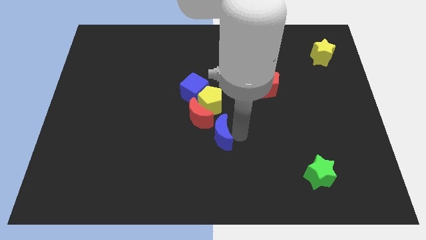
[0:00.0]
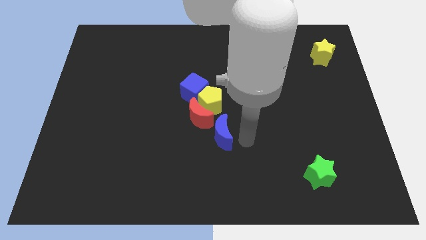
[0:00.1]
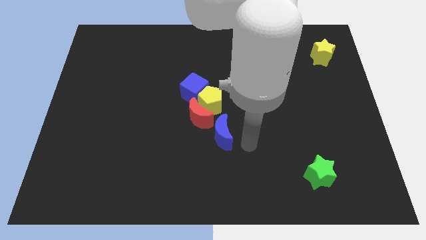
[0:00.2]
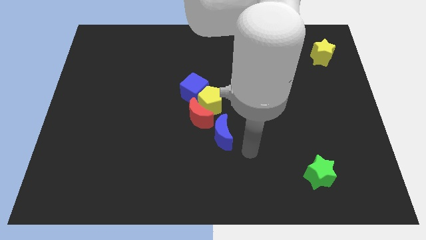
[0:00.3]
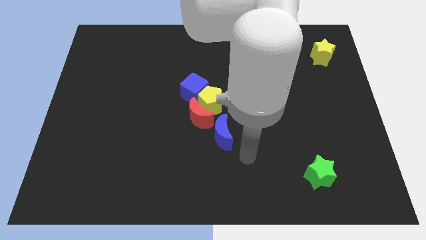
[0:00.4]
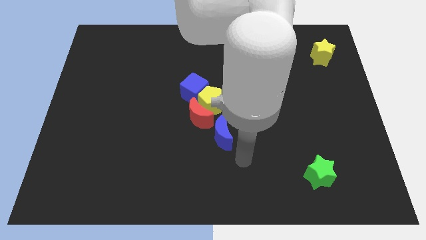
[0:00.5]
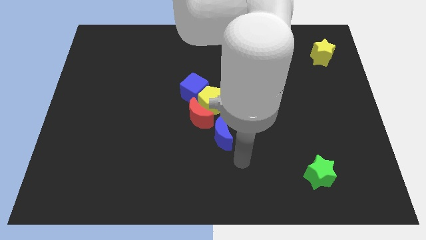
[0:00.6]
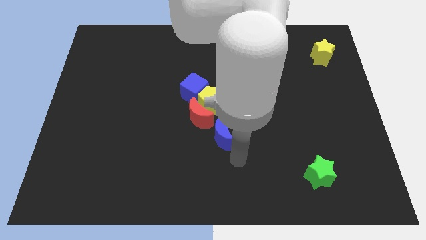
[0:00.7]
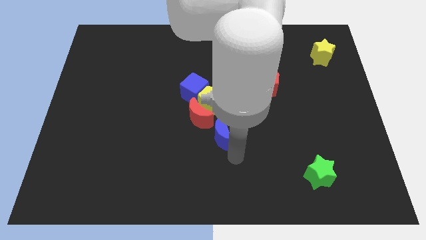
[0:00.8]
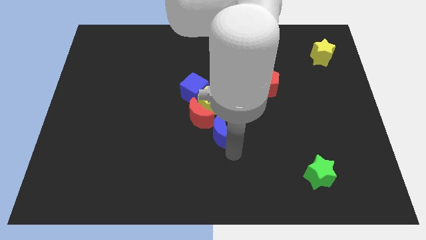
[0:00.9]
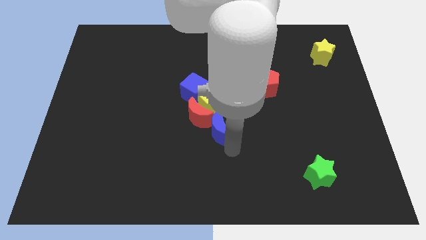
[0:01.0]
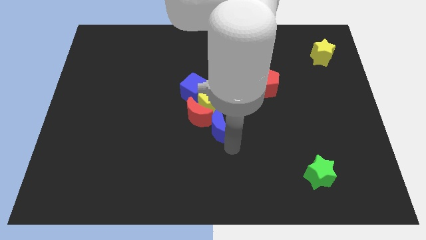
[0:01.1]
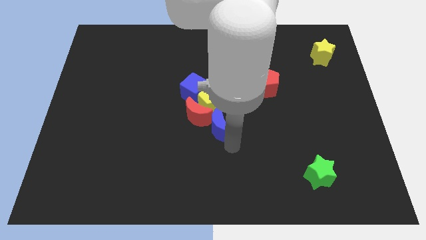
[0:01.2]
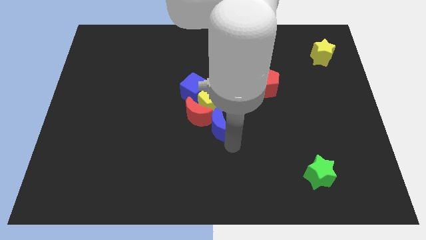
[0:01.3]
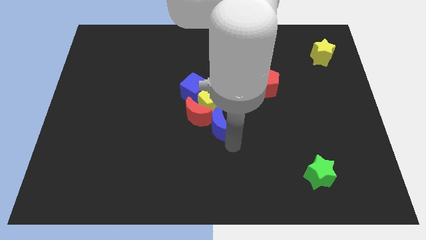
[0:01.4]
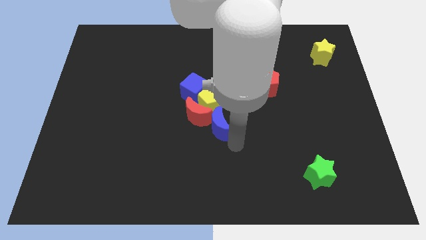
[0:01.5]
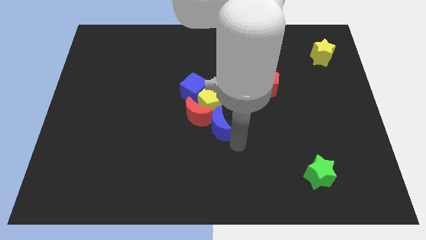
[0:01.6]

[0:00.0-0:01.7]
push the blue crescent into the red crescent

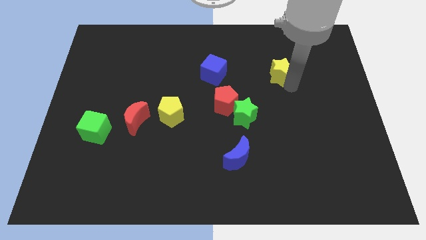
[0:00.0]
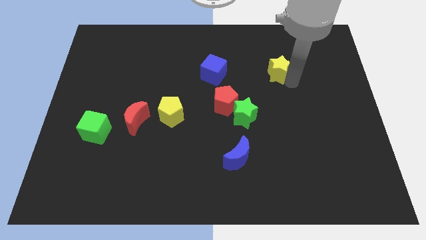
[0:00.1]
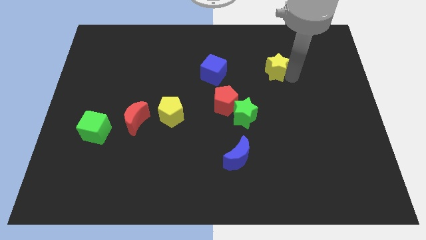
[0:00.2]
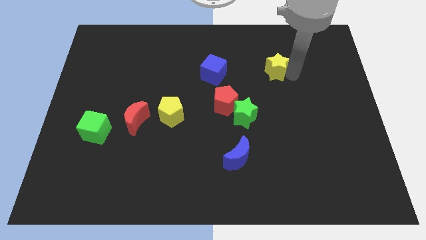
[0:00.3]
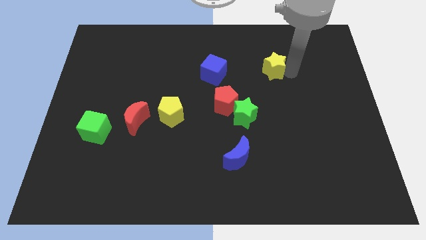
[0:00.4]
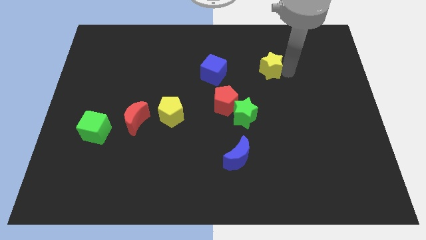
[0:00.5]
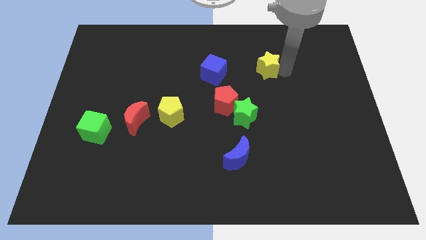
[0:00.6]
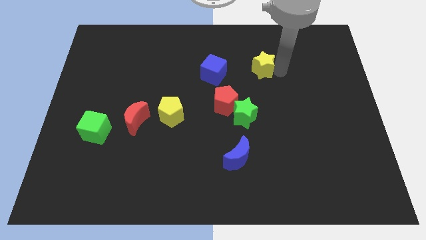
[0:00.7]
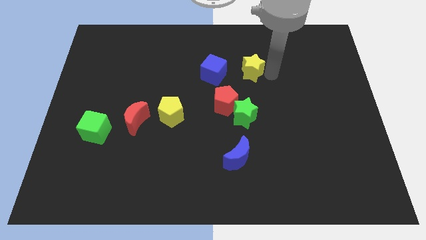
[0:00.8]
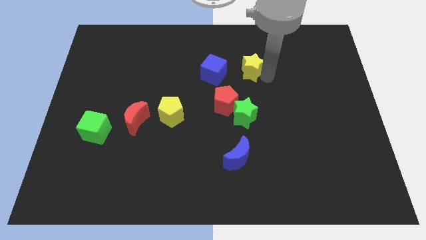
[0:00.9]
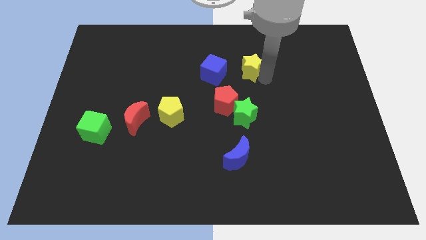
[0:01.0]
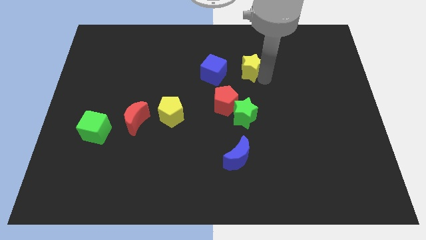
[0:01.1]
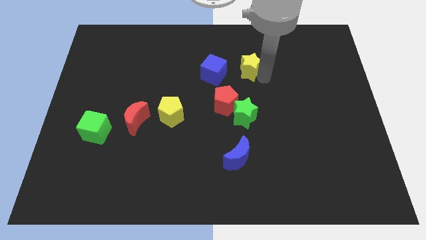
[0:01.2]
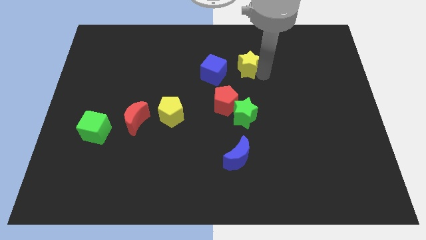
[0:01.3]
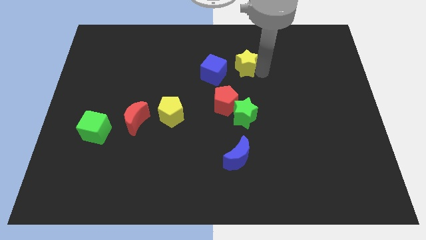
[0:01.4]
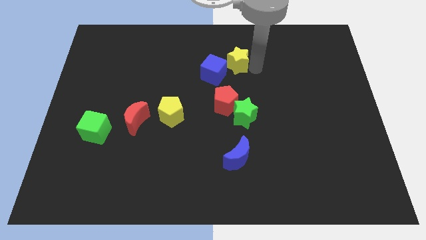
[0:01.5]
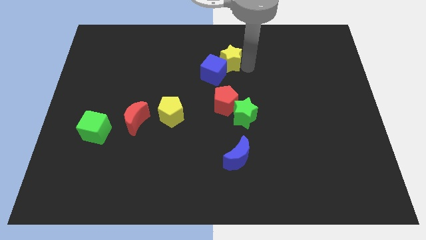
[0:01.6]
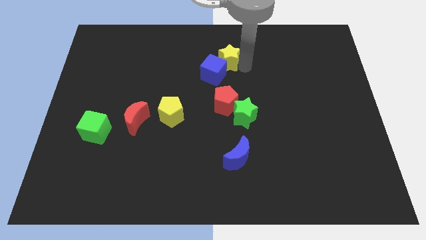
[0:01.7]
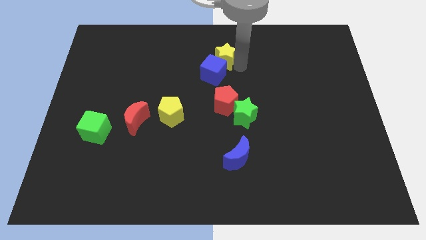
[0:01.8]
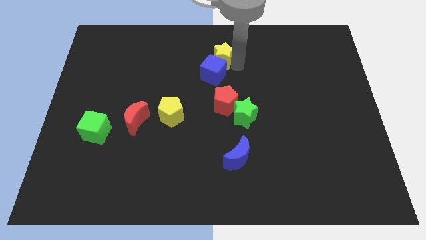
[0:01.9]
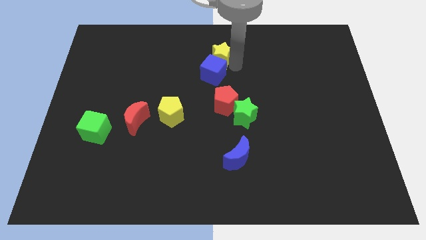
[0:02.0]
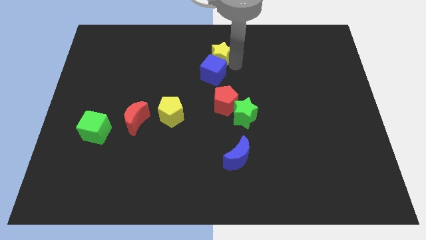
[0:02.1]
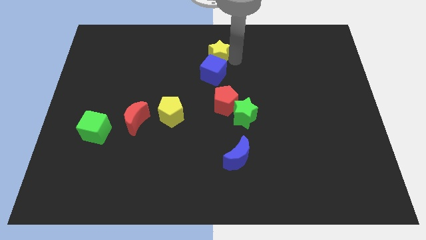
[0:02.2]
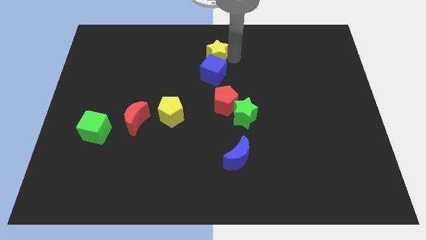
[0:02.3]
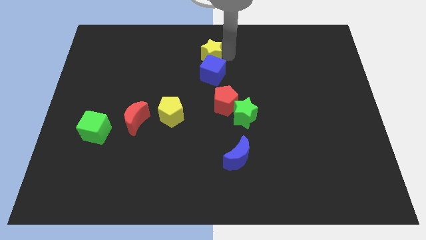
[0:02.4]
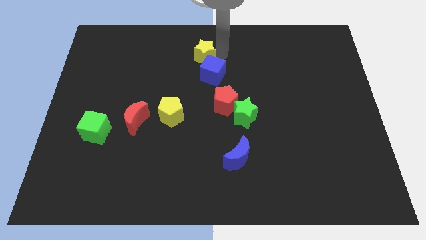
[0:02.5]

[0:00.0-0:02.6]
push the yellow star above the blue cube

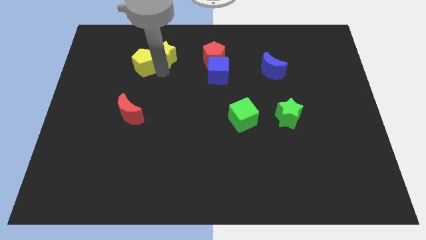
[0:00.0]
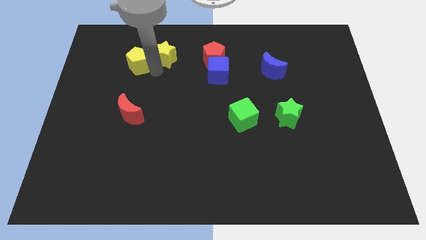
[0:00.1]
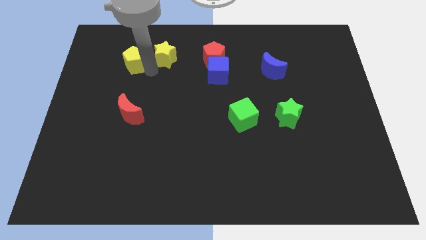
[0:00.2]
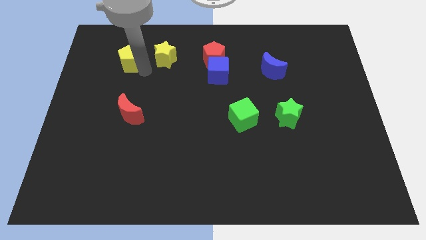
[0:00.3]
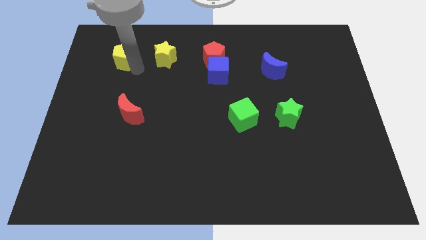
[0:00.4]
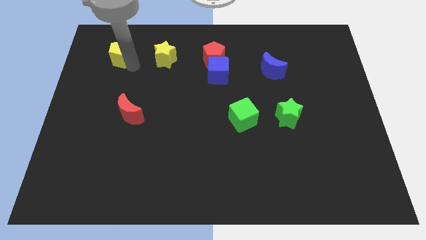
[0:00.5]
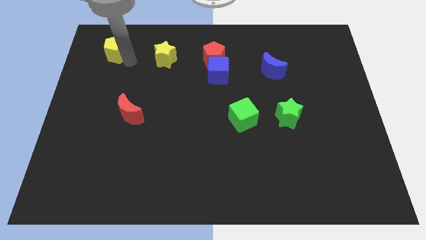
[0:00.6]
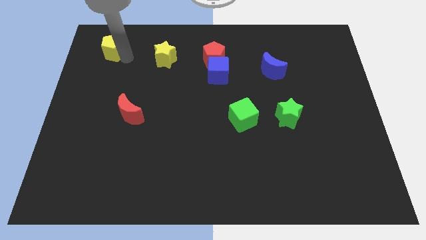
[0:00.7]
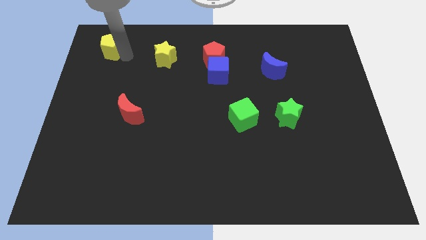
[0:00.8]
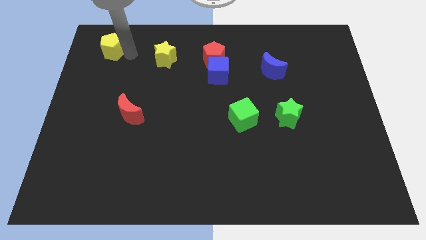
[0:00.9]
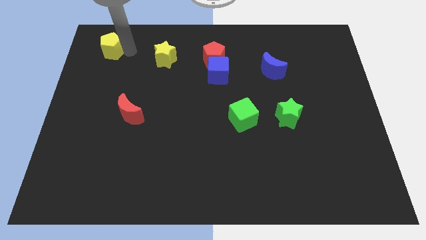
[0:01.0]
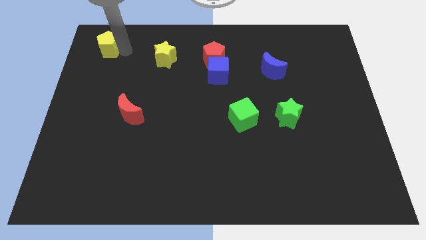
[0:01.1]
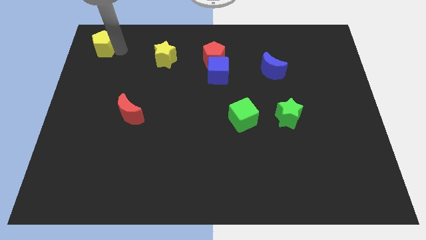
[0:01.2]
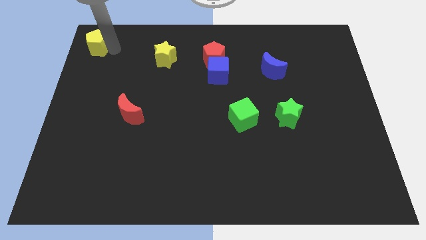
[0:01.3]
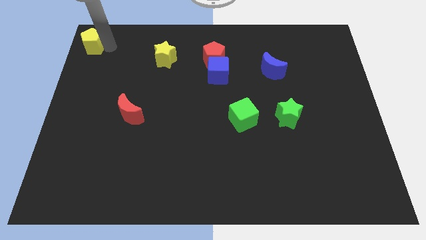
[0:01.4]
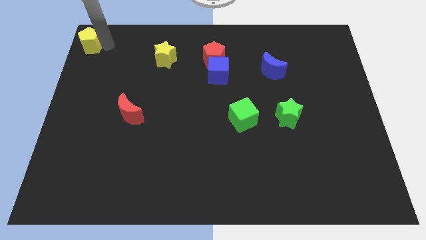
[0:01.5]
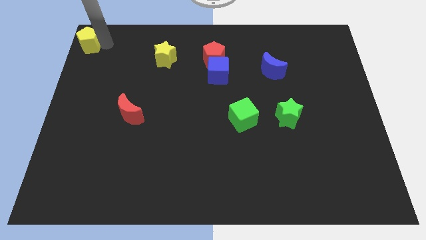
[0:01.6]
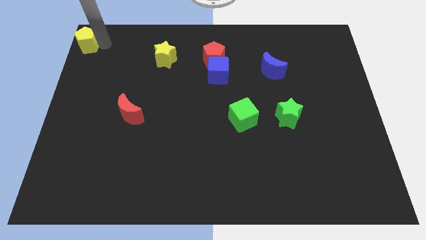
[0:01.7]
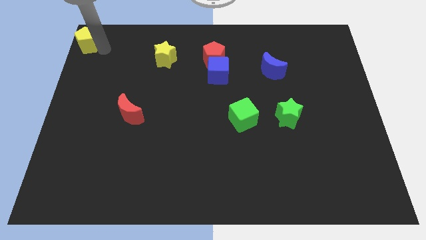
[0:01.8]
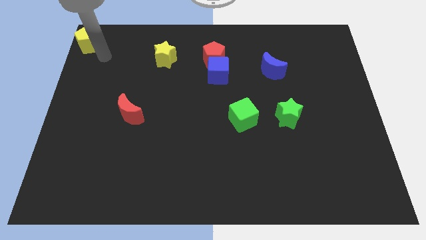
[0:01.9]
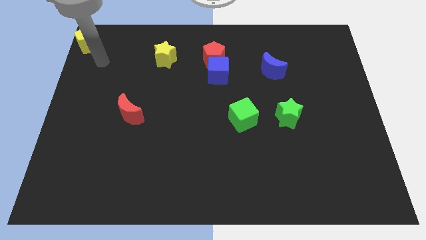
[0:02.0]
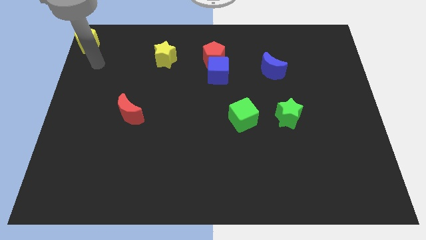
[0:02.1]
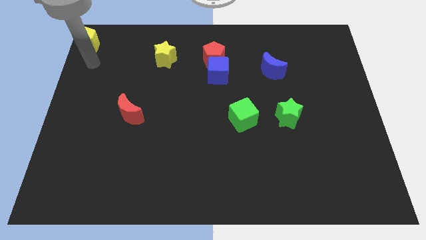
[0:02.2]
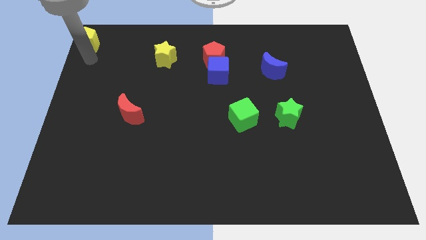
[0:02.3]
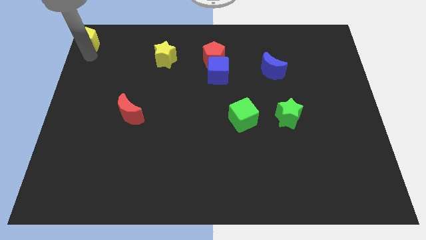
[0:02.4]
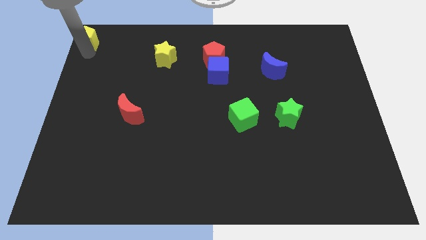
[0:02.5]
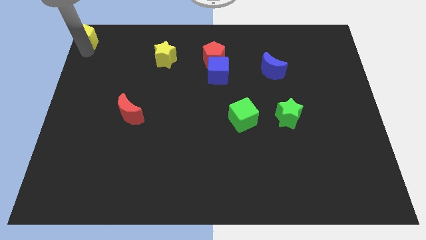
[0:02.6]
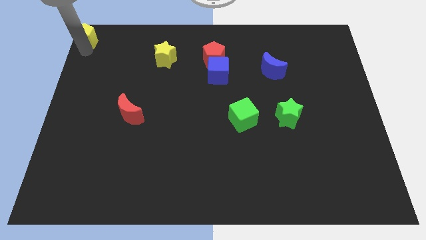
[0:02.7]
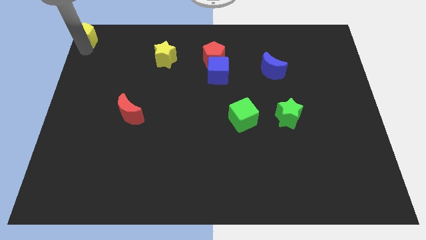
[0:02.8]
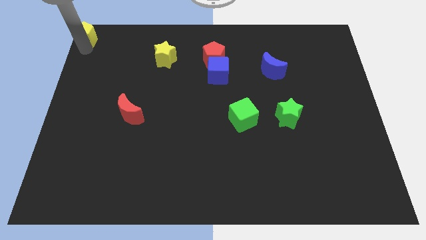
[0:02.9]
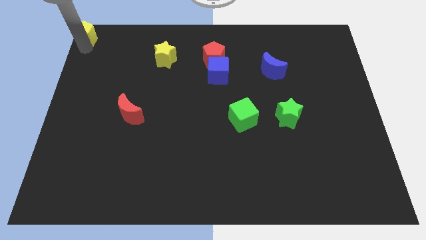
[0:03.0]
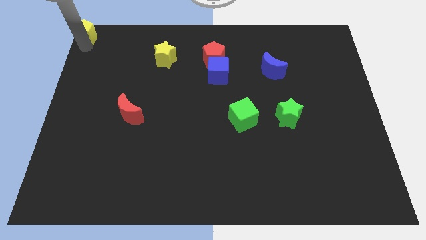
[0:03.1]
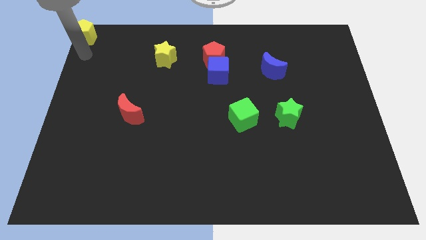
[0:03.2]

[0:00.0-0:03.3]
push the yellow pentagon to the top left corner

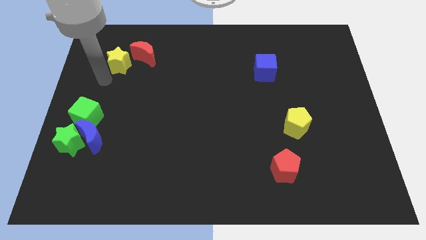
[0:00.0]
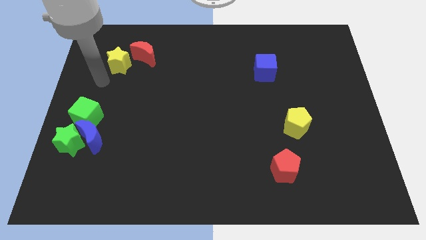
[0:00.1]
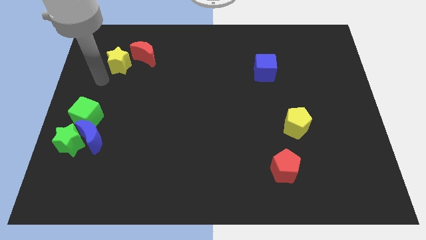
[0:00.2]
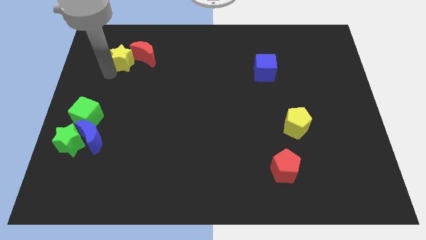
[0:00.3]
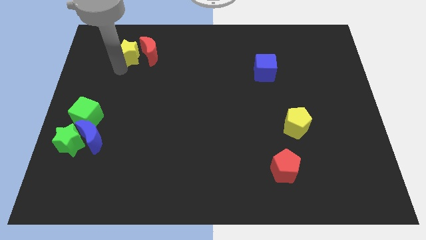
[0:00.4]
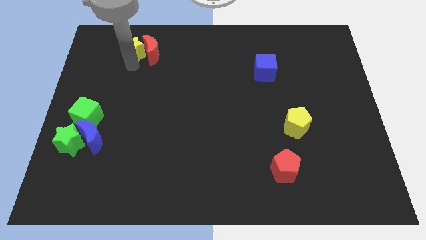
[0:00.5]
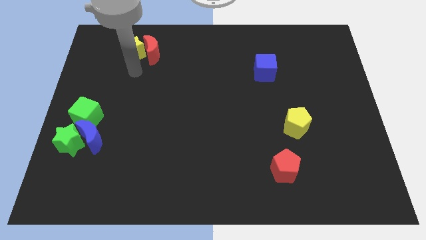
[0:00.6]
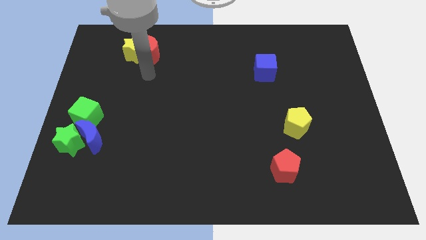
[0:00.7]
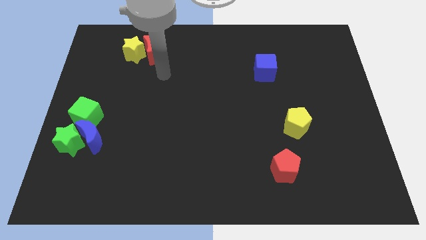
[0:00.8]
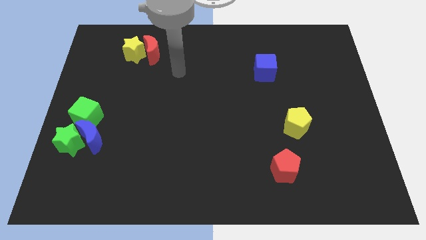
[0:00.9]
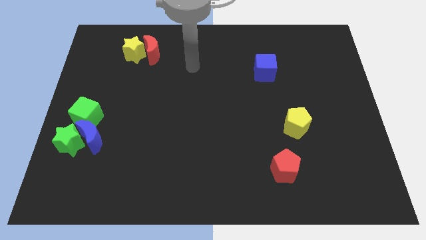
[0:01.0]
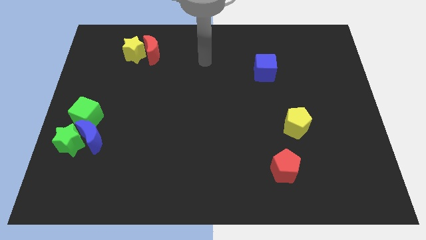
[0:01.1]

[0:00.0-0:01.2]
move the yellow star to the left side of the red crescent

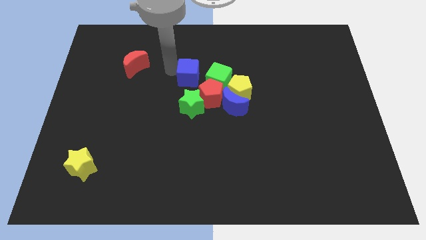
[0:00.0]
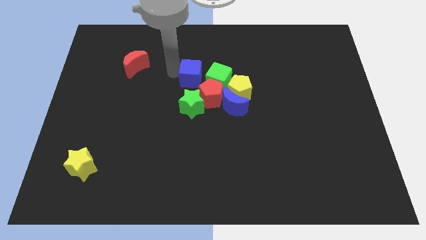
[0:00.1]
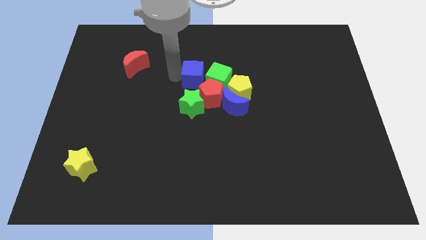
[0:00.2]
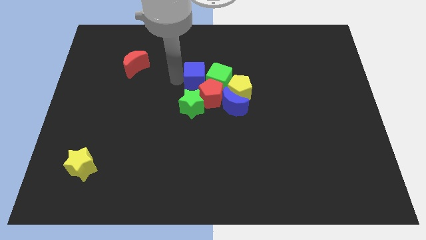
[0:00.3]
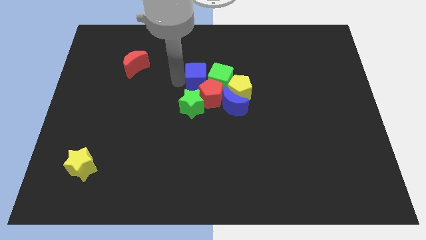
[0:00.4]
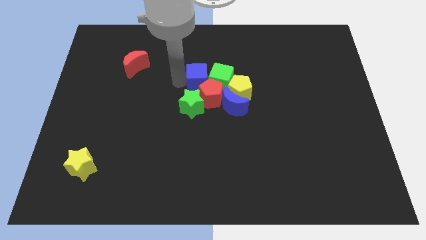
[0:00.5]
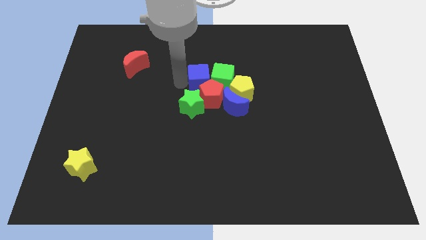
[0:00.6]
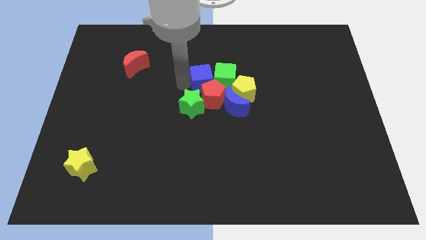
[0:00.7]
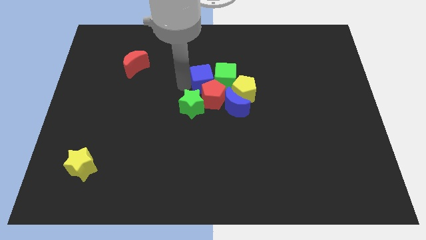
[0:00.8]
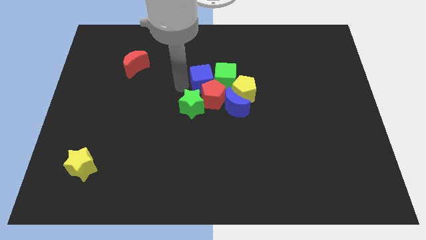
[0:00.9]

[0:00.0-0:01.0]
push the blue cube into the group of blocks
